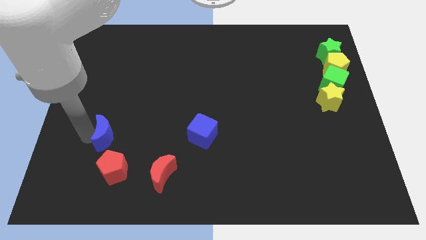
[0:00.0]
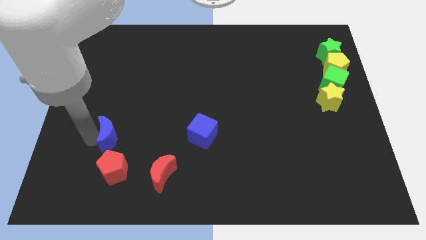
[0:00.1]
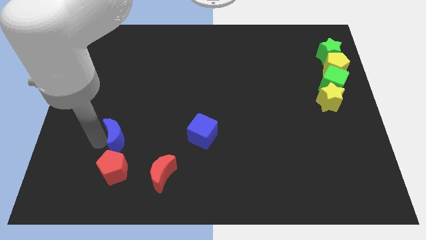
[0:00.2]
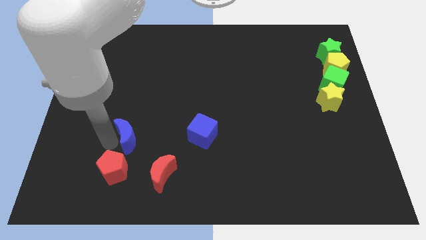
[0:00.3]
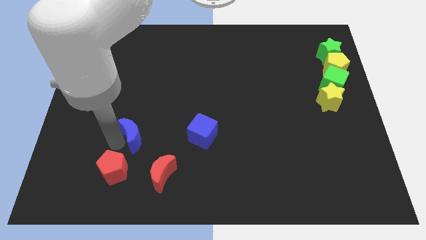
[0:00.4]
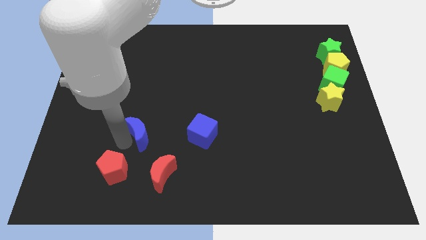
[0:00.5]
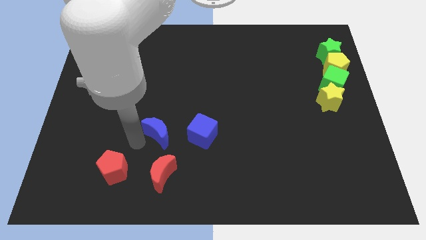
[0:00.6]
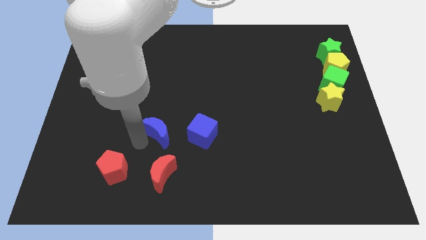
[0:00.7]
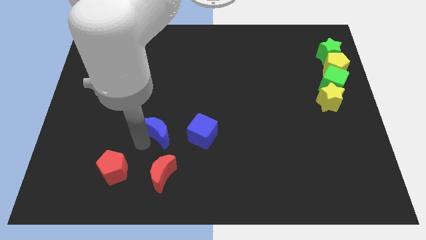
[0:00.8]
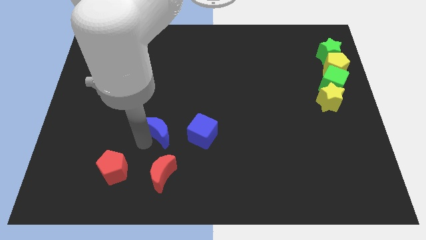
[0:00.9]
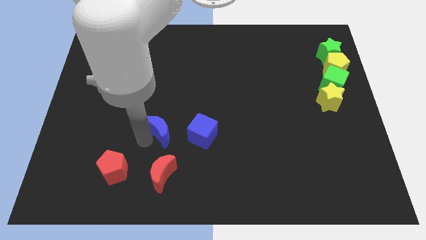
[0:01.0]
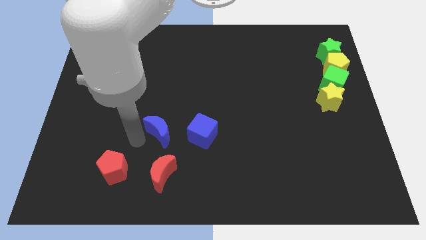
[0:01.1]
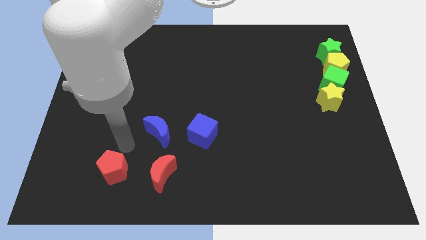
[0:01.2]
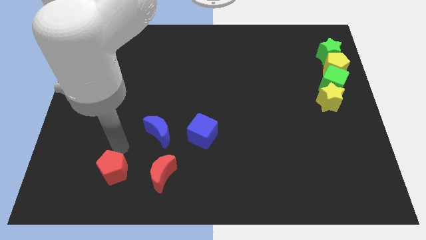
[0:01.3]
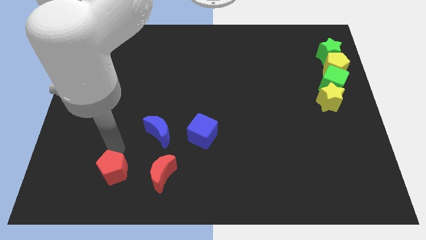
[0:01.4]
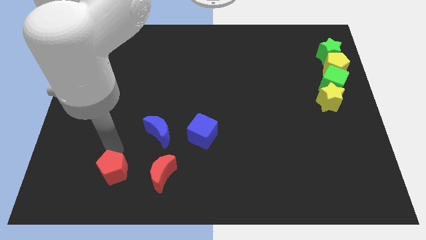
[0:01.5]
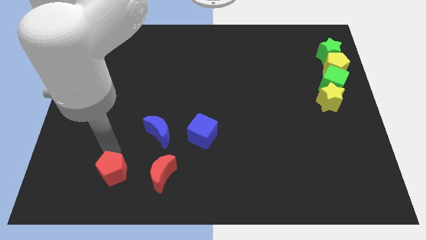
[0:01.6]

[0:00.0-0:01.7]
place the blue crescent near to the blue cube

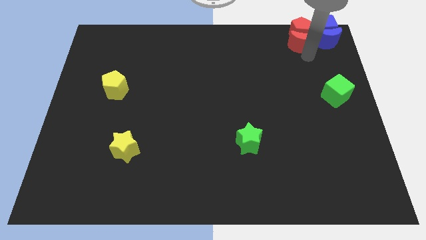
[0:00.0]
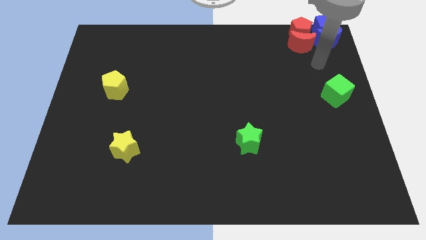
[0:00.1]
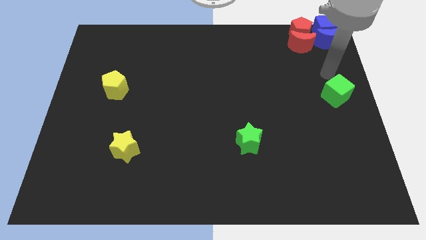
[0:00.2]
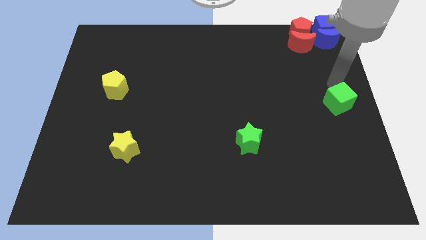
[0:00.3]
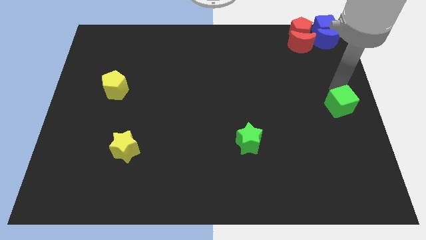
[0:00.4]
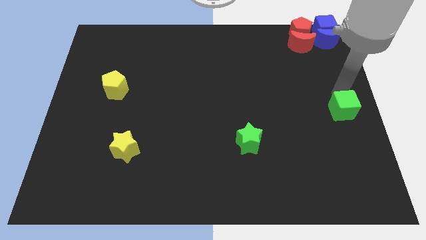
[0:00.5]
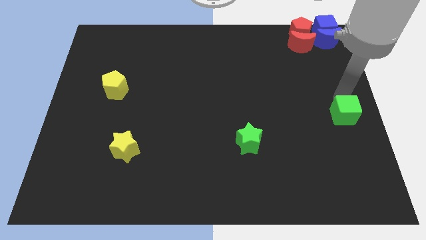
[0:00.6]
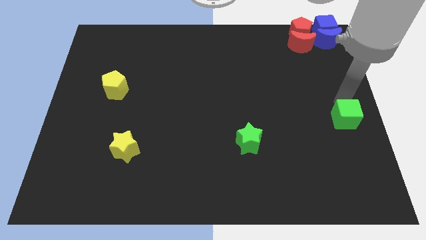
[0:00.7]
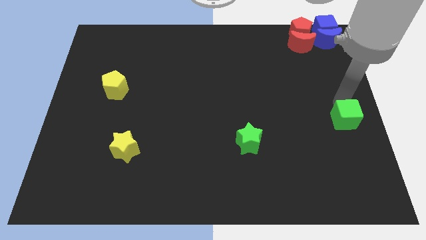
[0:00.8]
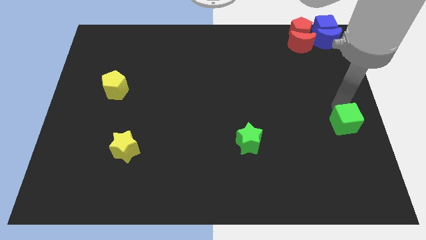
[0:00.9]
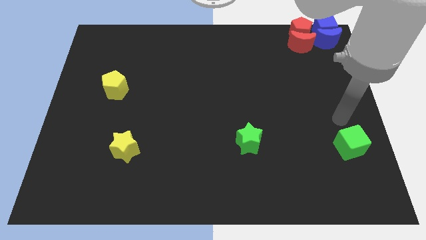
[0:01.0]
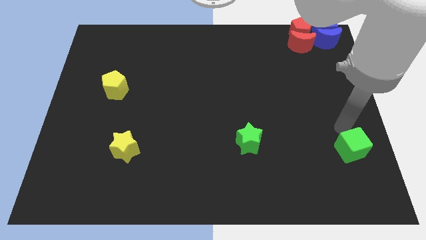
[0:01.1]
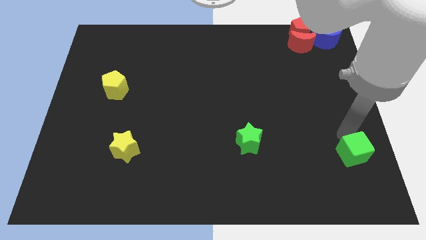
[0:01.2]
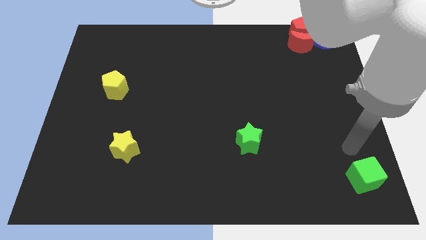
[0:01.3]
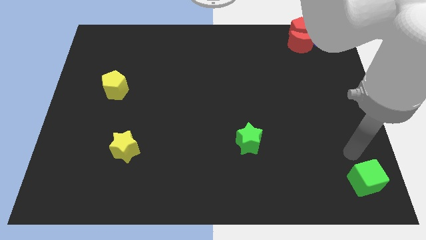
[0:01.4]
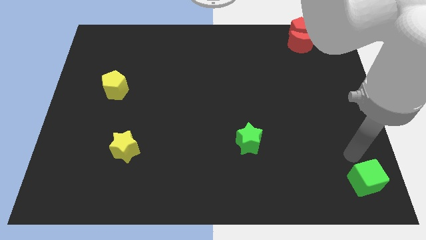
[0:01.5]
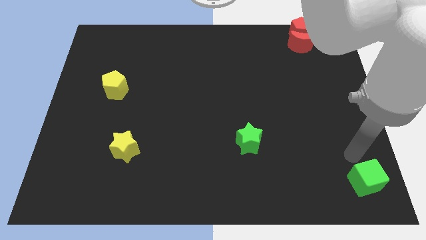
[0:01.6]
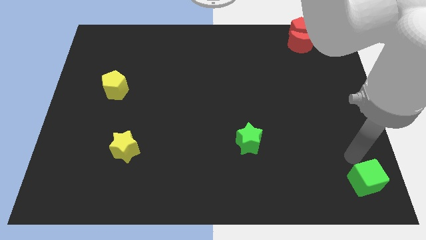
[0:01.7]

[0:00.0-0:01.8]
push the green cube to the bottom right

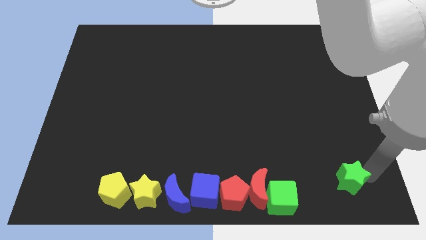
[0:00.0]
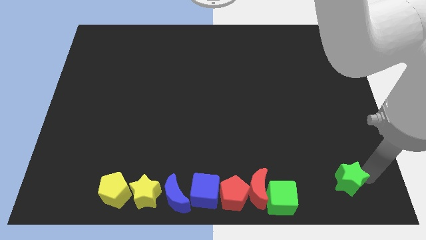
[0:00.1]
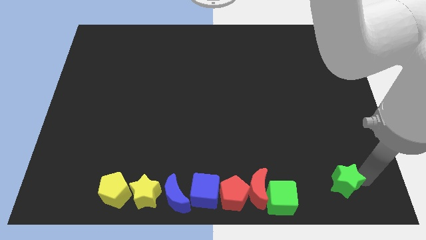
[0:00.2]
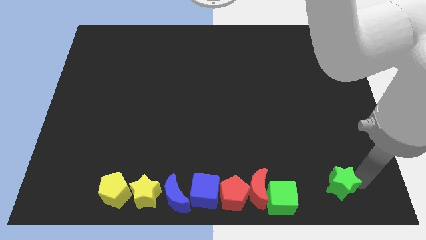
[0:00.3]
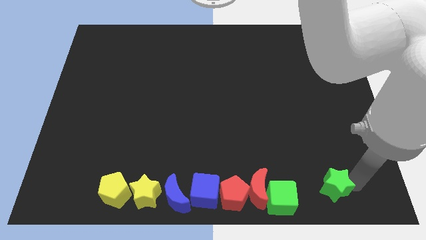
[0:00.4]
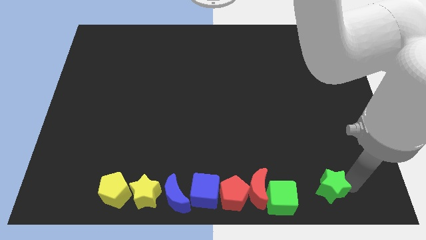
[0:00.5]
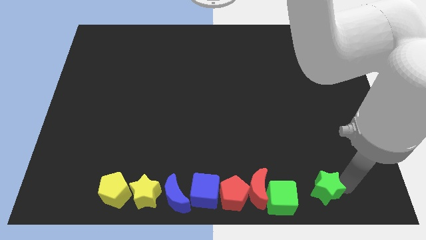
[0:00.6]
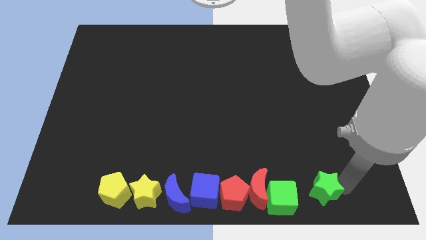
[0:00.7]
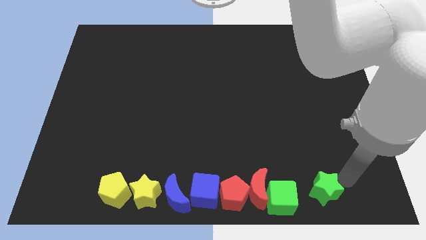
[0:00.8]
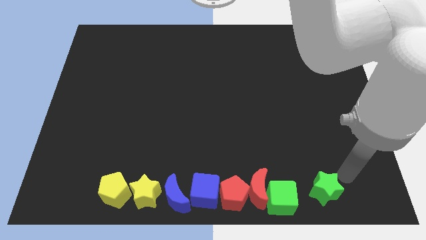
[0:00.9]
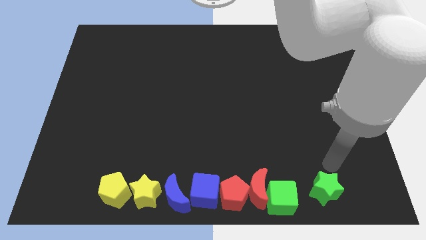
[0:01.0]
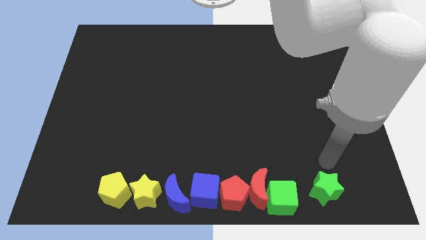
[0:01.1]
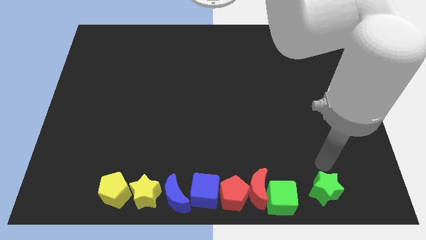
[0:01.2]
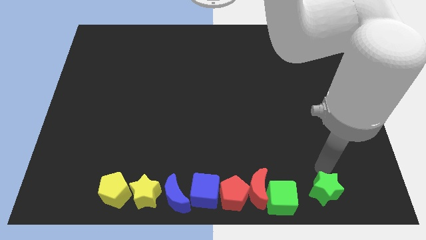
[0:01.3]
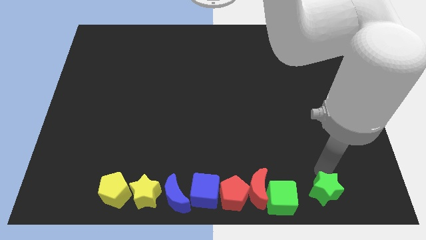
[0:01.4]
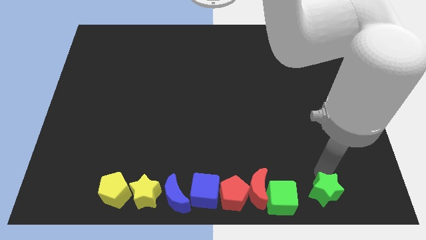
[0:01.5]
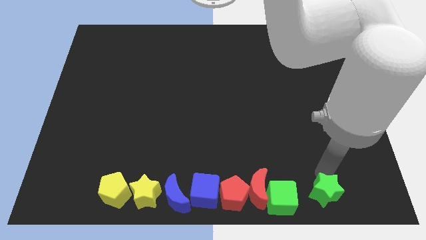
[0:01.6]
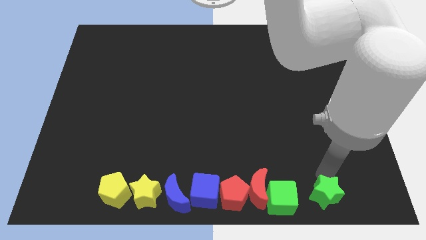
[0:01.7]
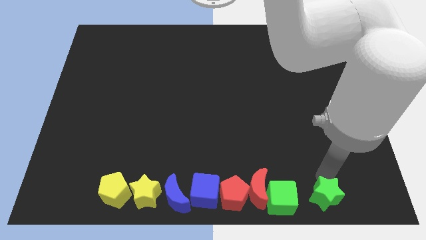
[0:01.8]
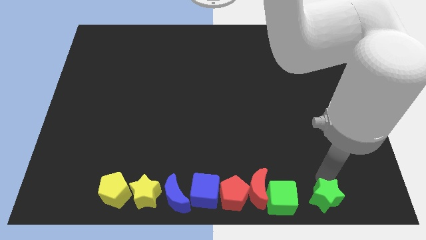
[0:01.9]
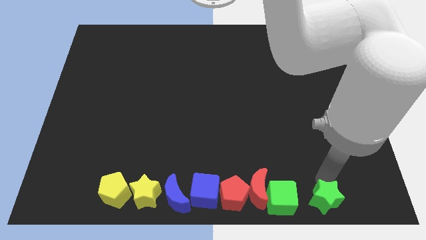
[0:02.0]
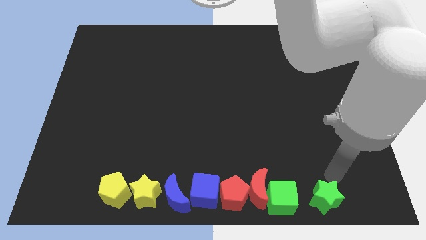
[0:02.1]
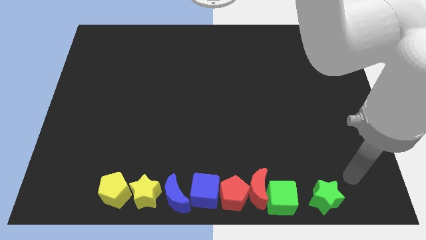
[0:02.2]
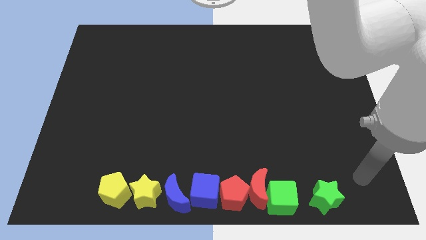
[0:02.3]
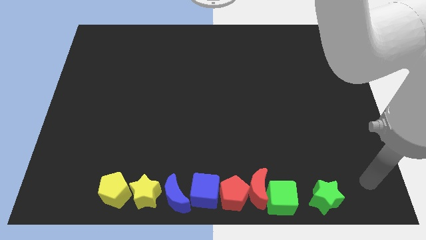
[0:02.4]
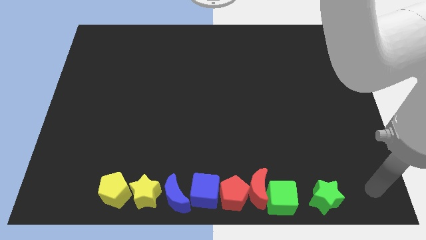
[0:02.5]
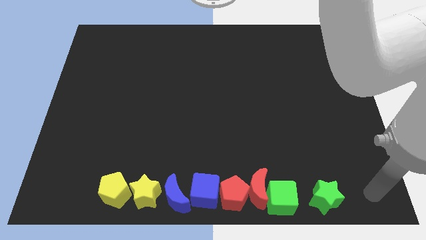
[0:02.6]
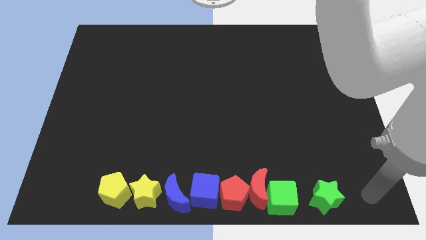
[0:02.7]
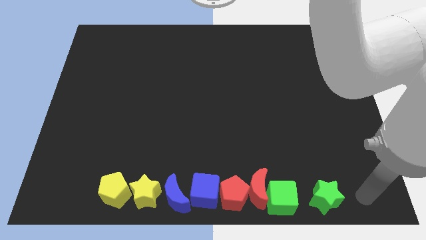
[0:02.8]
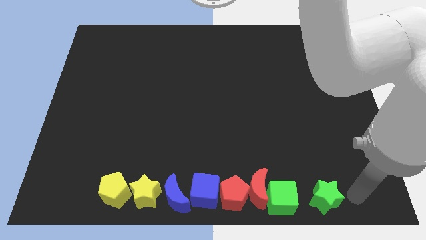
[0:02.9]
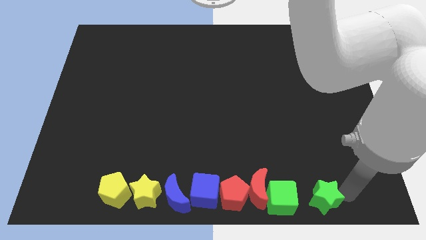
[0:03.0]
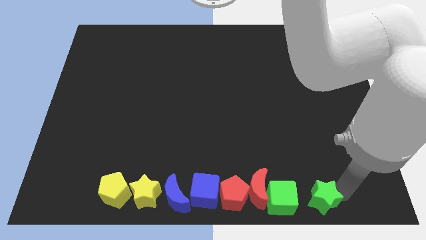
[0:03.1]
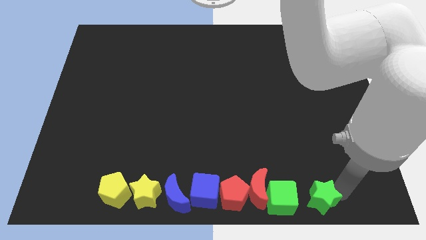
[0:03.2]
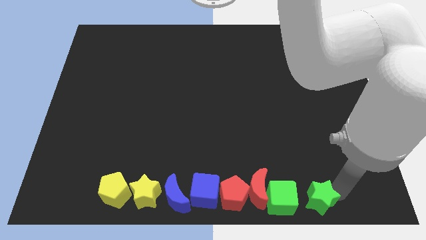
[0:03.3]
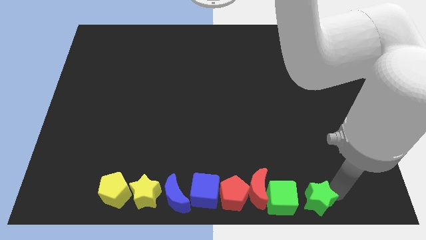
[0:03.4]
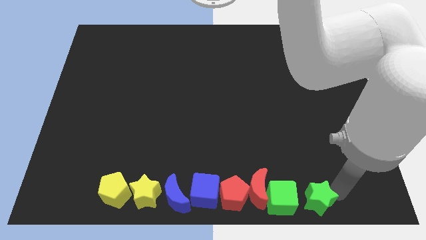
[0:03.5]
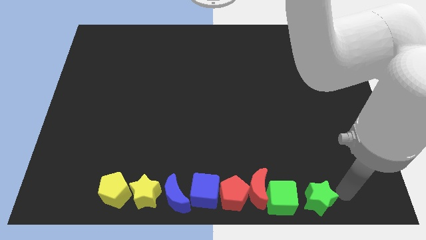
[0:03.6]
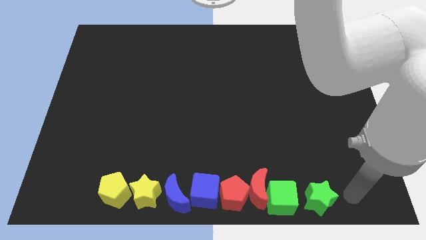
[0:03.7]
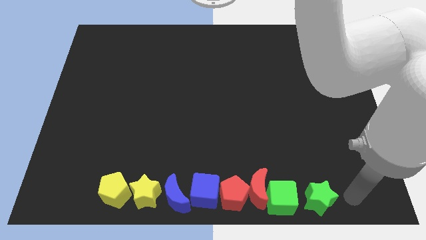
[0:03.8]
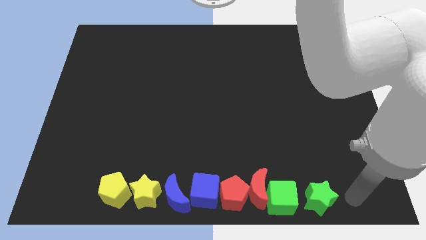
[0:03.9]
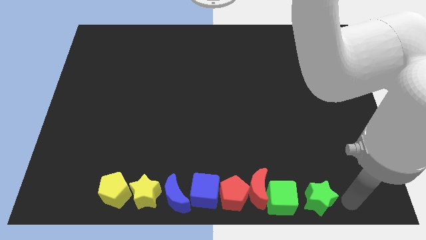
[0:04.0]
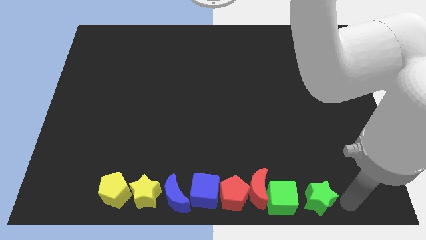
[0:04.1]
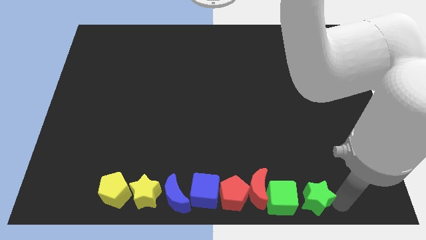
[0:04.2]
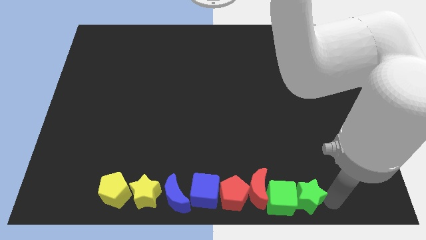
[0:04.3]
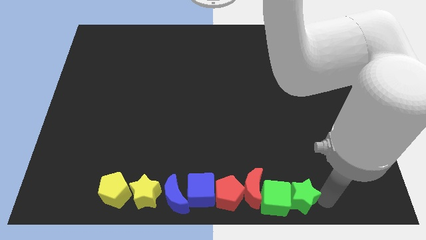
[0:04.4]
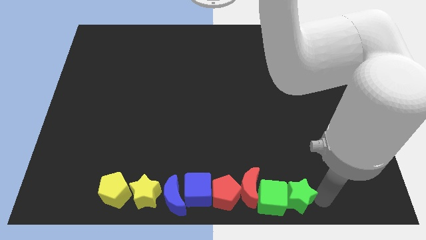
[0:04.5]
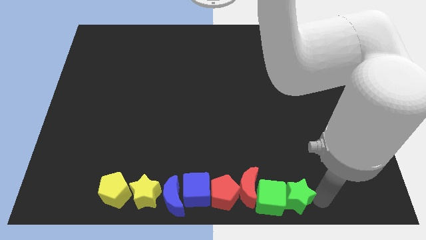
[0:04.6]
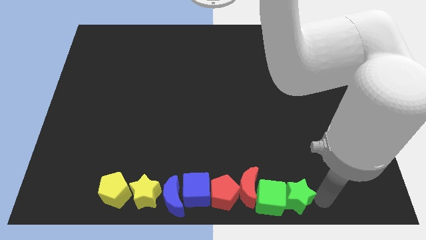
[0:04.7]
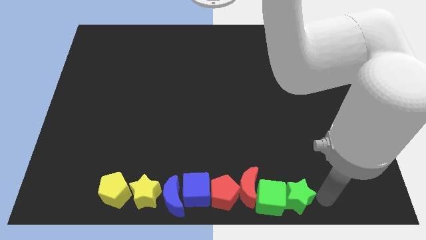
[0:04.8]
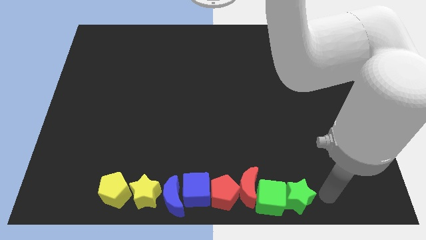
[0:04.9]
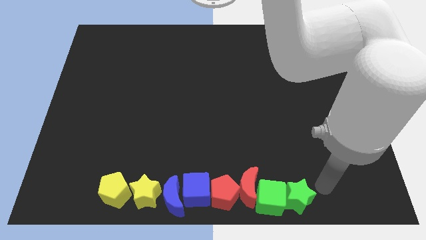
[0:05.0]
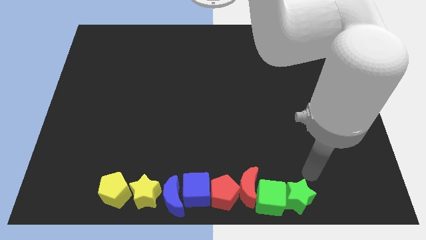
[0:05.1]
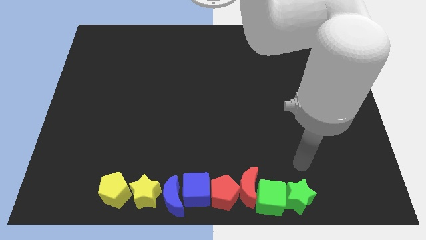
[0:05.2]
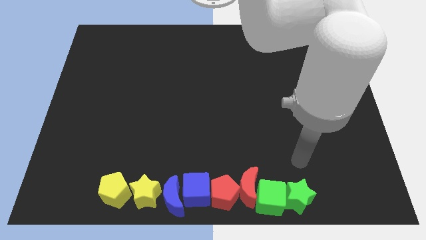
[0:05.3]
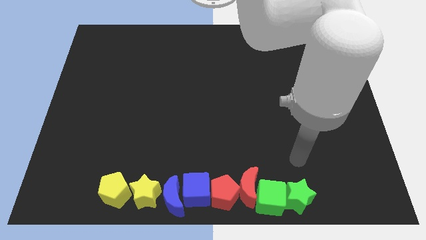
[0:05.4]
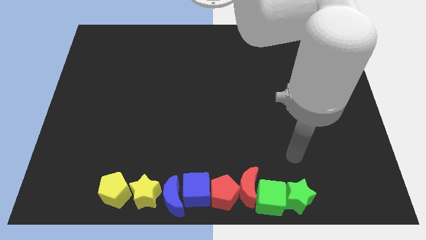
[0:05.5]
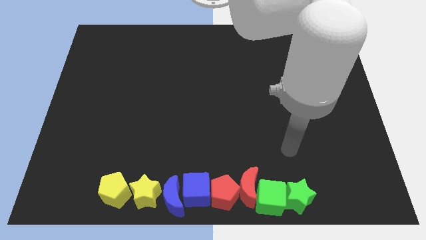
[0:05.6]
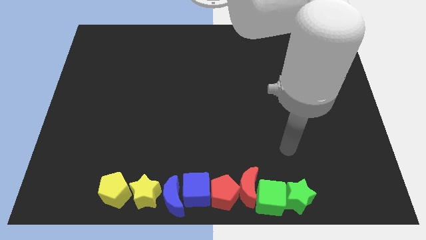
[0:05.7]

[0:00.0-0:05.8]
push the green star into the green cube
